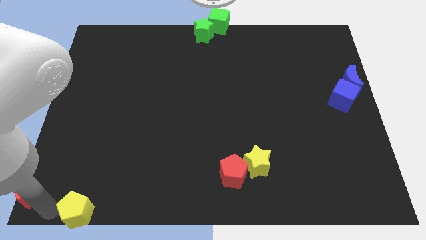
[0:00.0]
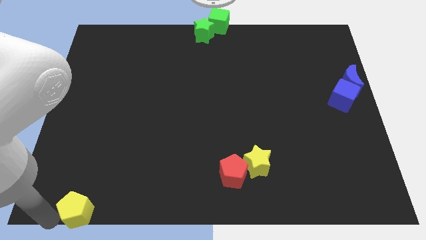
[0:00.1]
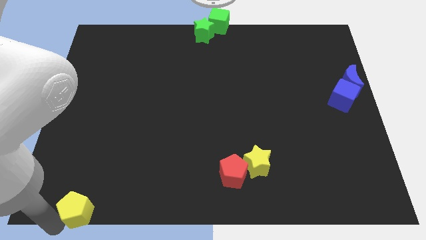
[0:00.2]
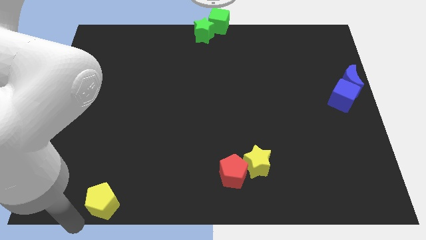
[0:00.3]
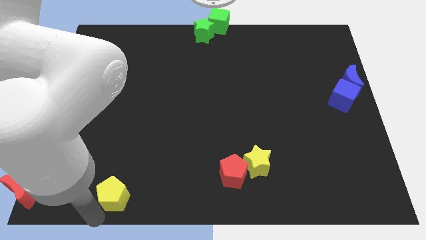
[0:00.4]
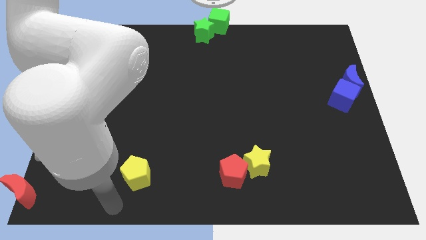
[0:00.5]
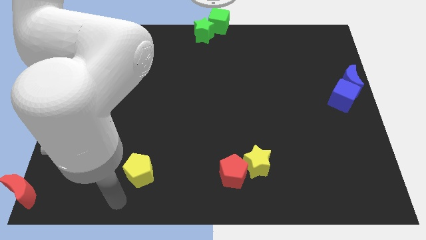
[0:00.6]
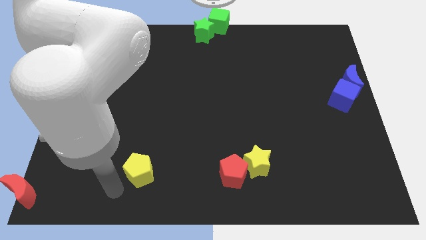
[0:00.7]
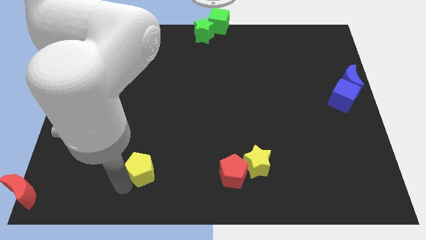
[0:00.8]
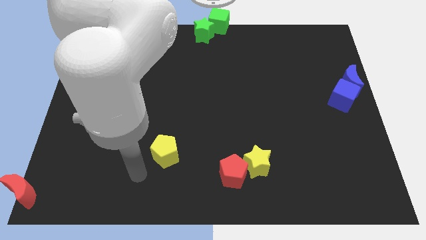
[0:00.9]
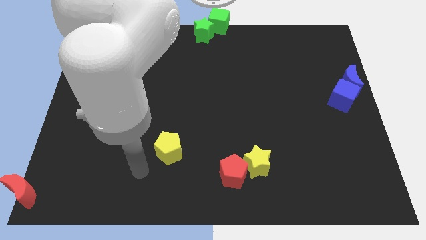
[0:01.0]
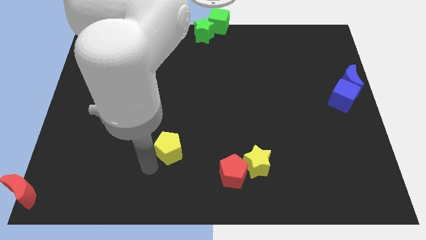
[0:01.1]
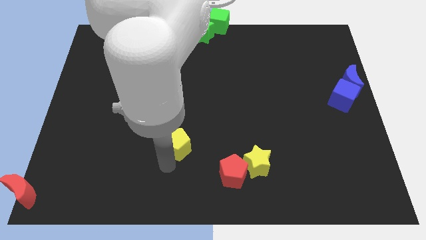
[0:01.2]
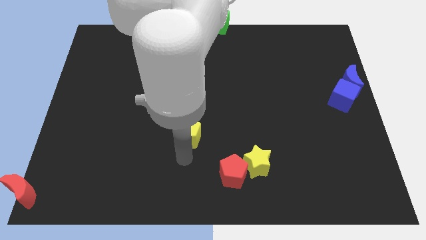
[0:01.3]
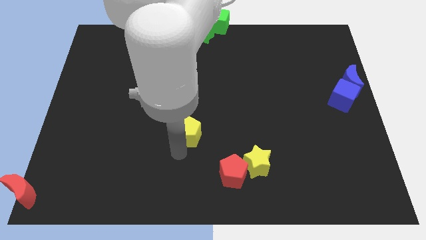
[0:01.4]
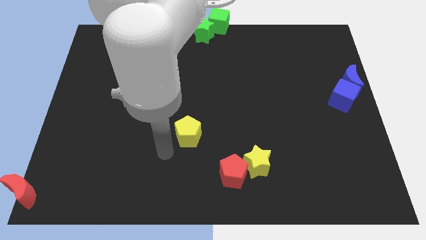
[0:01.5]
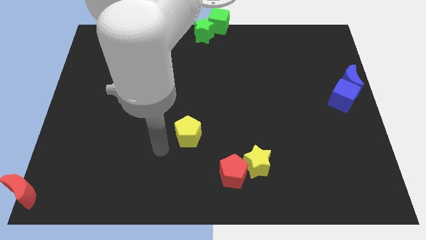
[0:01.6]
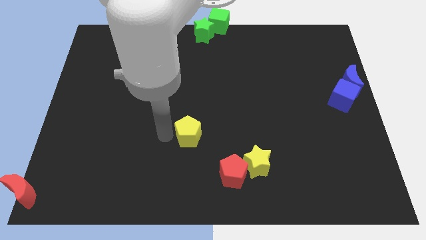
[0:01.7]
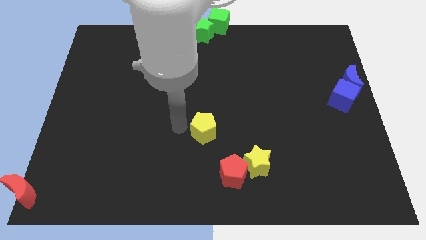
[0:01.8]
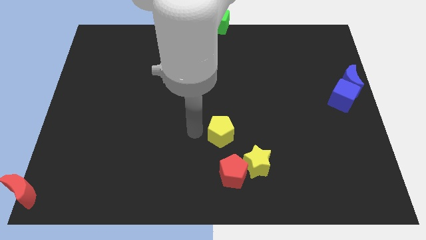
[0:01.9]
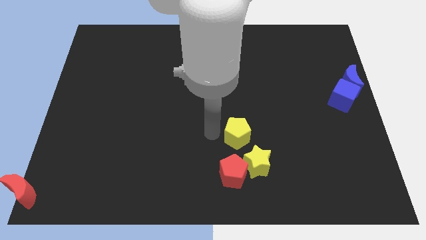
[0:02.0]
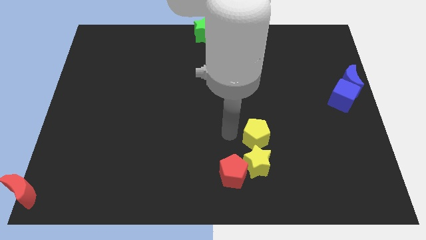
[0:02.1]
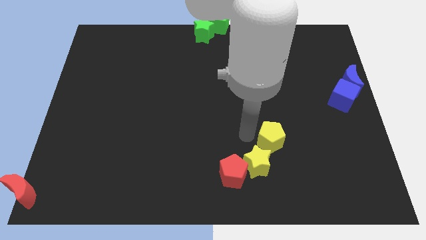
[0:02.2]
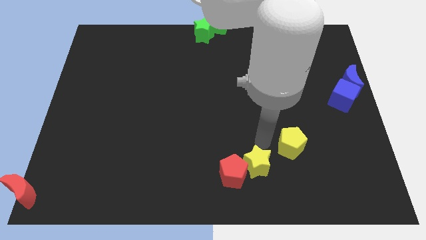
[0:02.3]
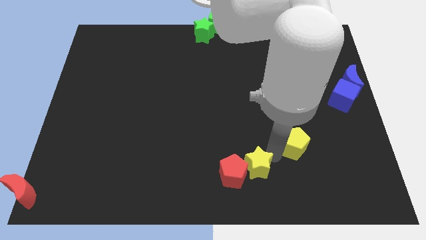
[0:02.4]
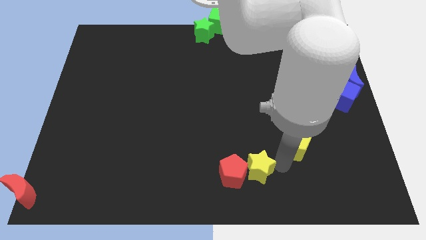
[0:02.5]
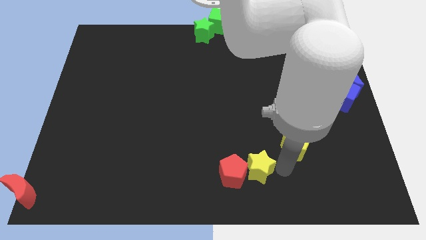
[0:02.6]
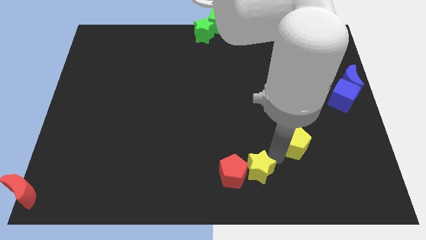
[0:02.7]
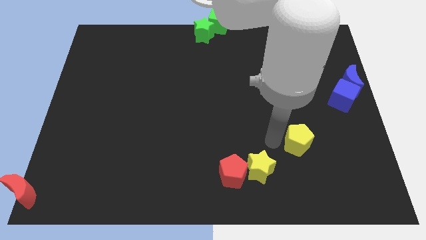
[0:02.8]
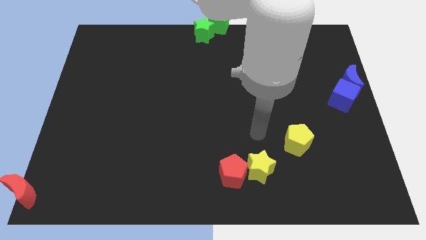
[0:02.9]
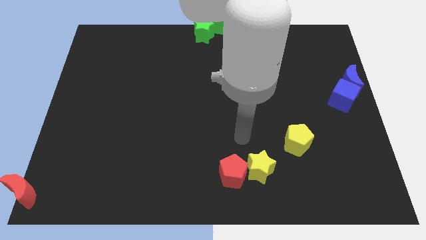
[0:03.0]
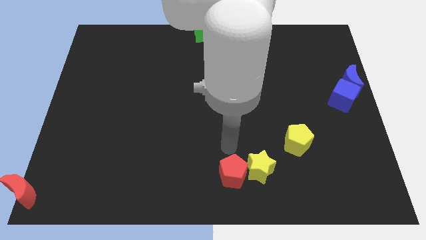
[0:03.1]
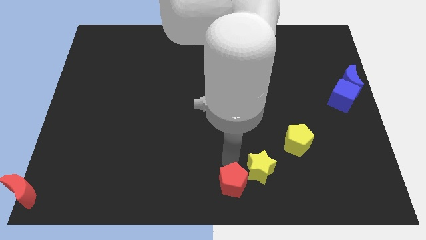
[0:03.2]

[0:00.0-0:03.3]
move the yellow pentagon to the top right of the yellow star

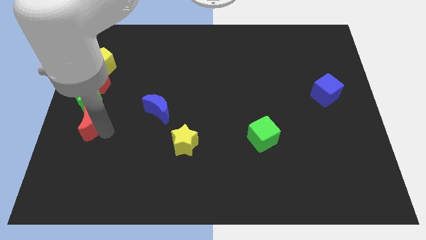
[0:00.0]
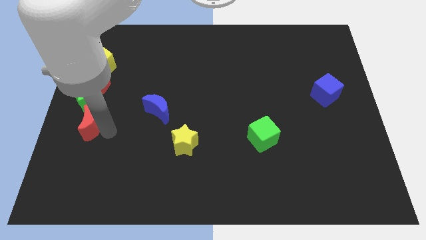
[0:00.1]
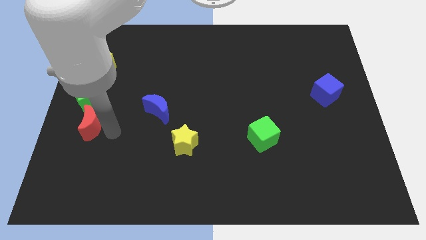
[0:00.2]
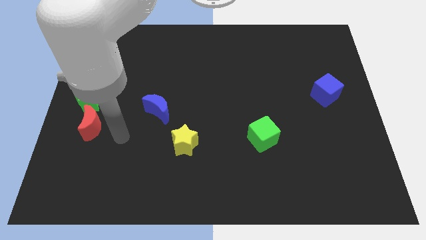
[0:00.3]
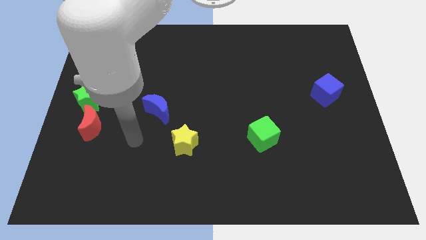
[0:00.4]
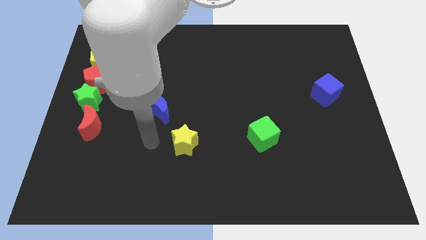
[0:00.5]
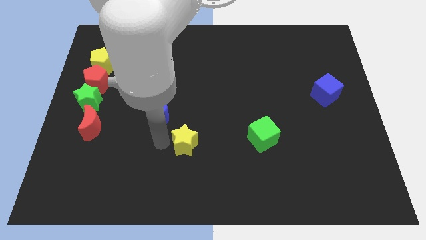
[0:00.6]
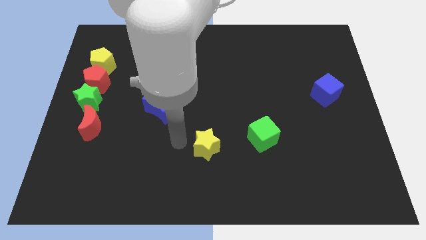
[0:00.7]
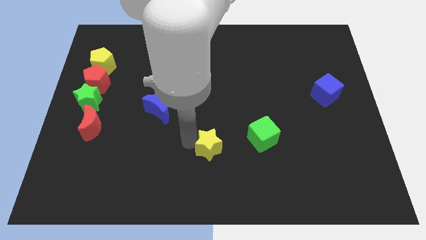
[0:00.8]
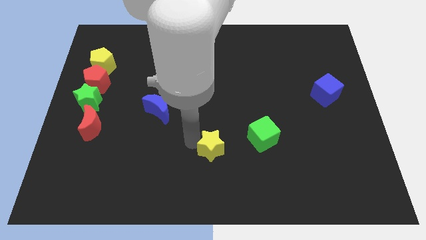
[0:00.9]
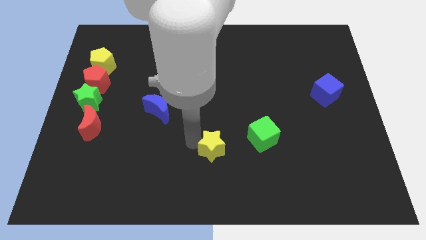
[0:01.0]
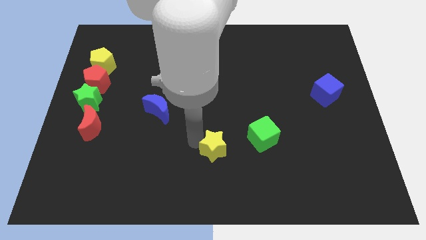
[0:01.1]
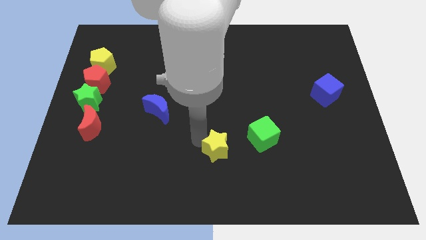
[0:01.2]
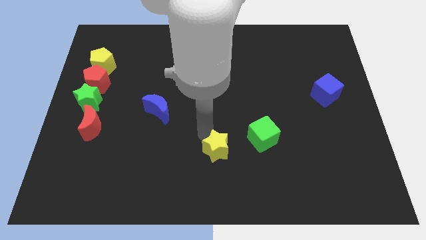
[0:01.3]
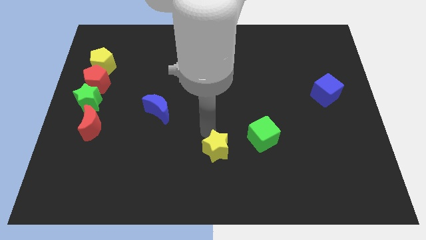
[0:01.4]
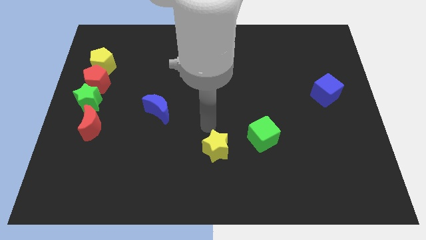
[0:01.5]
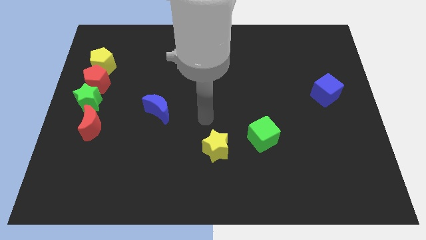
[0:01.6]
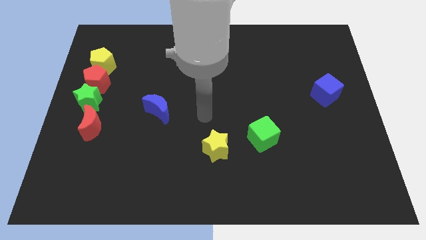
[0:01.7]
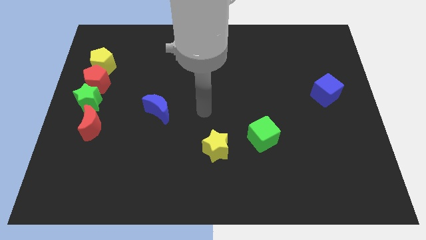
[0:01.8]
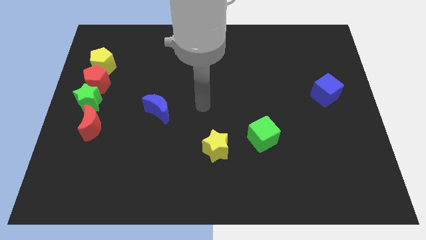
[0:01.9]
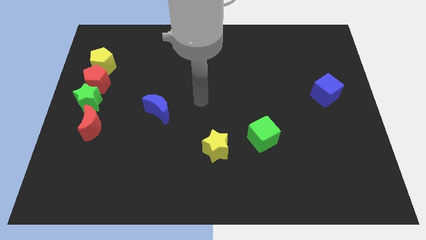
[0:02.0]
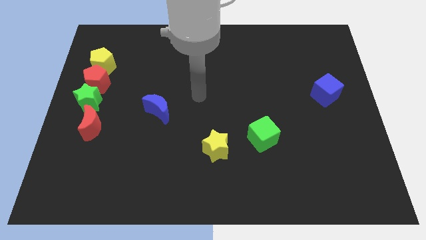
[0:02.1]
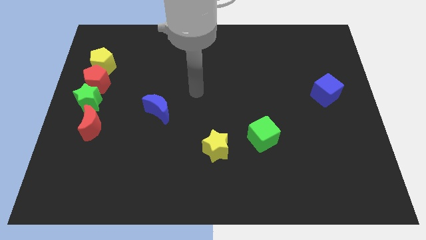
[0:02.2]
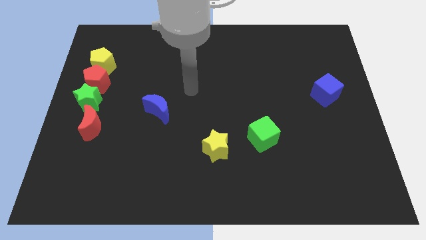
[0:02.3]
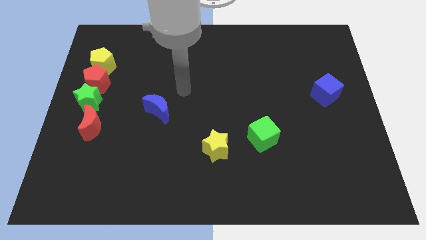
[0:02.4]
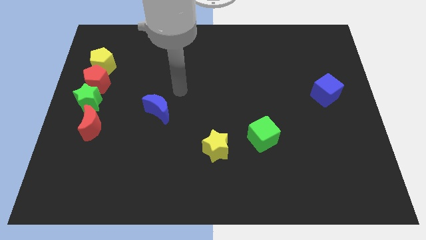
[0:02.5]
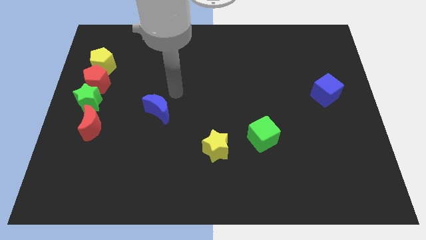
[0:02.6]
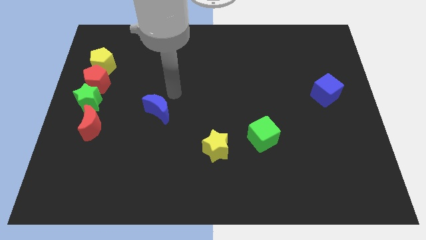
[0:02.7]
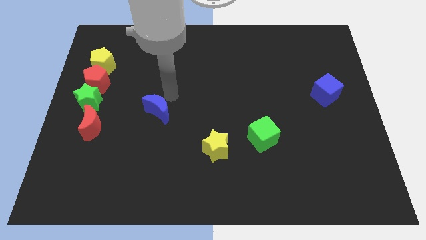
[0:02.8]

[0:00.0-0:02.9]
push yellow star towards the green cube

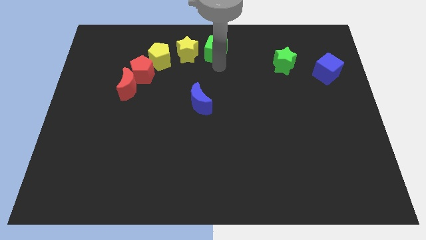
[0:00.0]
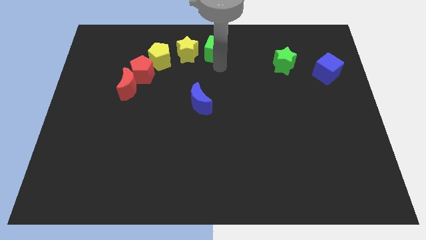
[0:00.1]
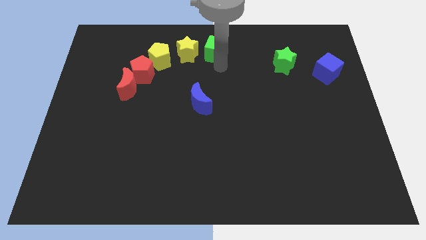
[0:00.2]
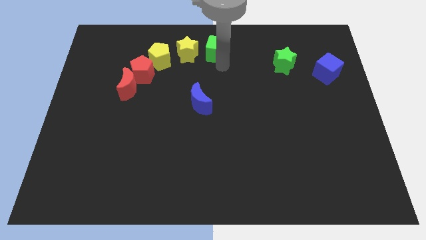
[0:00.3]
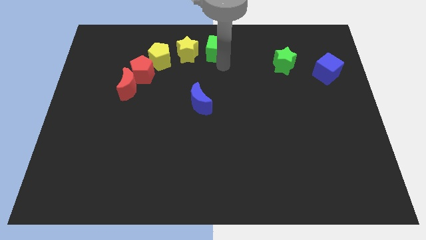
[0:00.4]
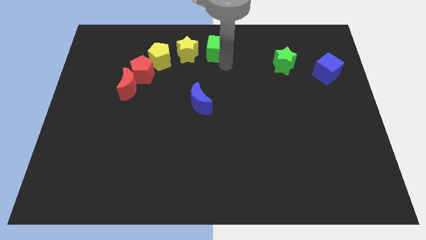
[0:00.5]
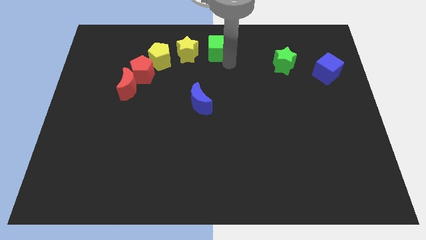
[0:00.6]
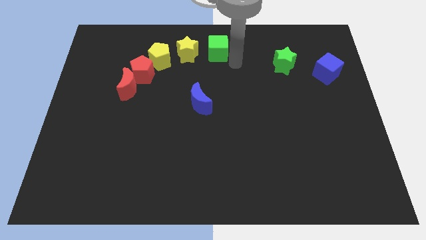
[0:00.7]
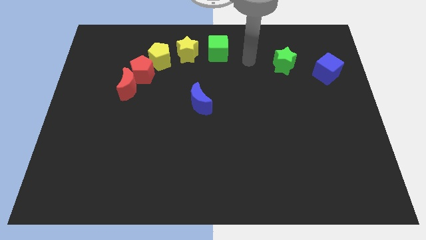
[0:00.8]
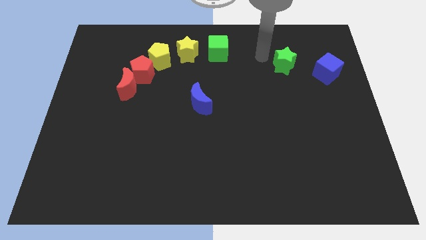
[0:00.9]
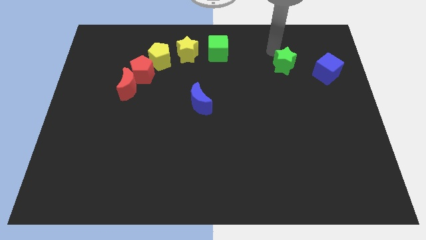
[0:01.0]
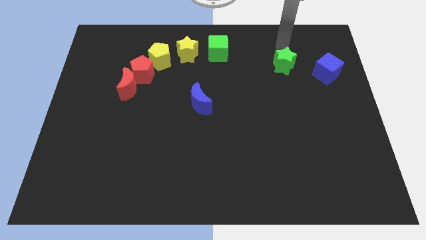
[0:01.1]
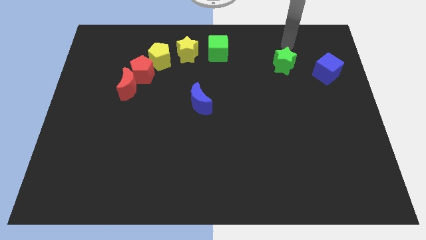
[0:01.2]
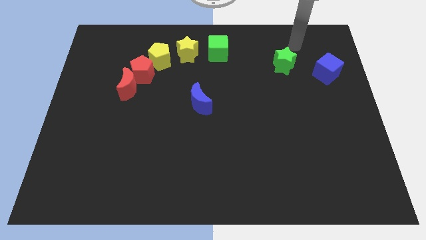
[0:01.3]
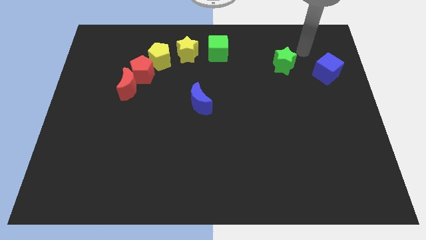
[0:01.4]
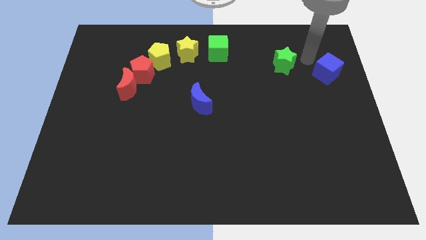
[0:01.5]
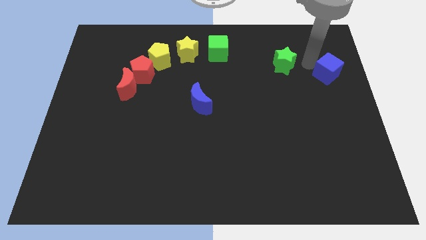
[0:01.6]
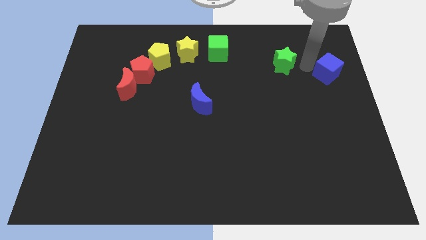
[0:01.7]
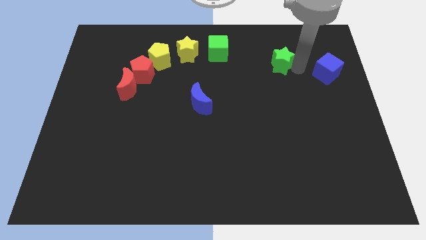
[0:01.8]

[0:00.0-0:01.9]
point your arm to the right of the green star

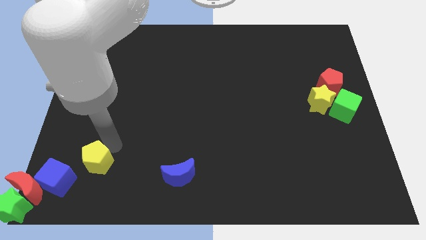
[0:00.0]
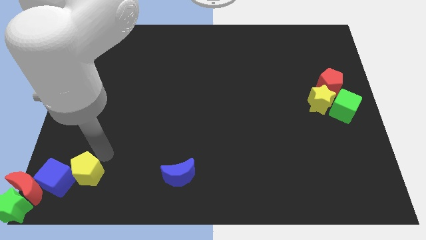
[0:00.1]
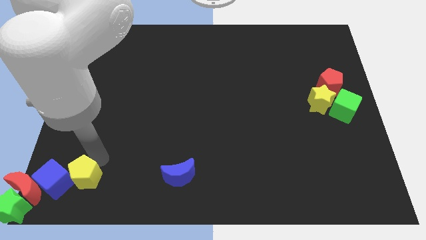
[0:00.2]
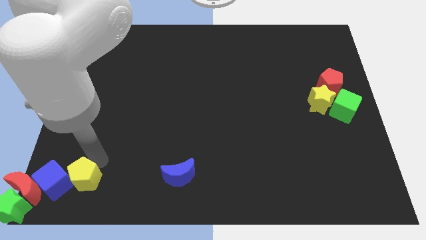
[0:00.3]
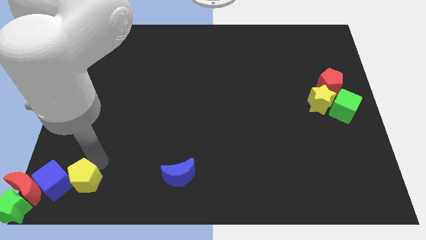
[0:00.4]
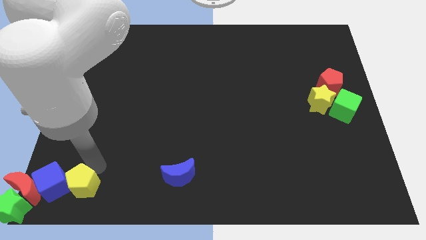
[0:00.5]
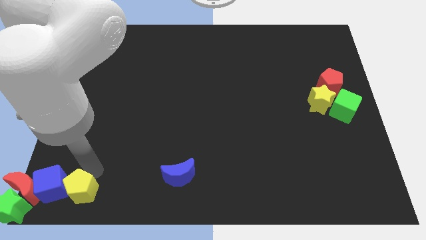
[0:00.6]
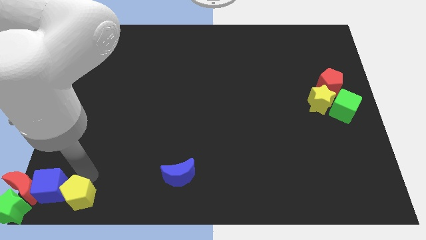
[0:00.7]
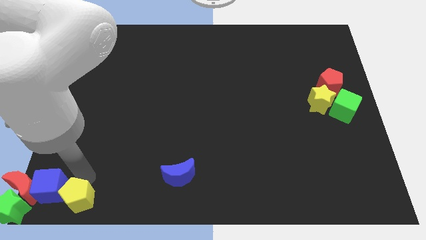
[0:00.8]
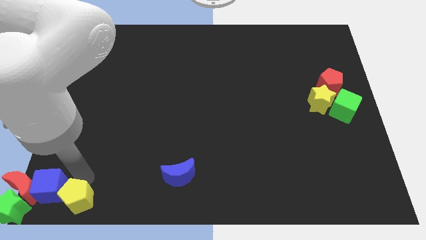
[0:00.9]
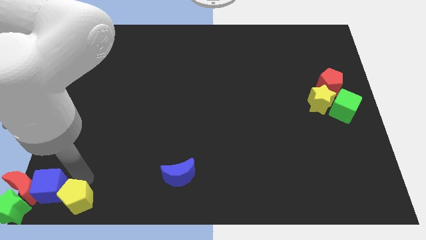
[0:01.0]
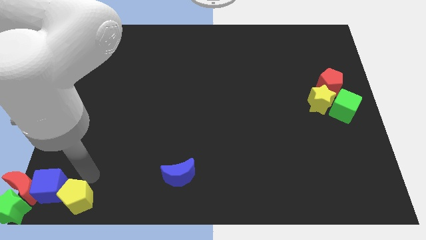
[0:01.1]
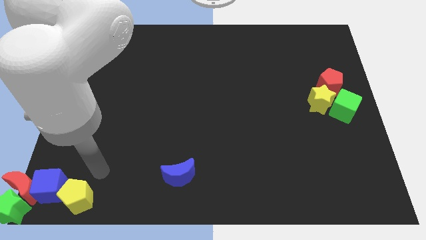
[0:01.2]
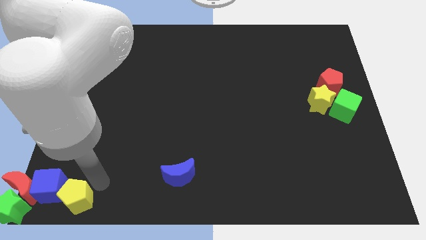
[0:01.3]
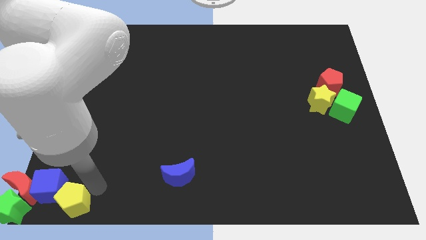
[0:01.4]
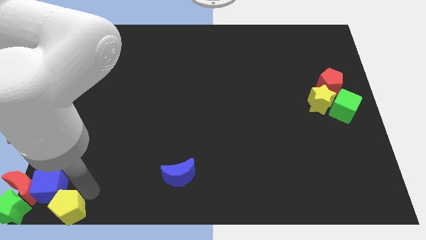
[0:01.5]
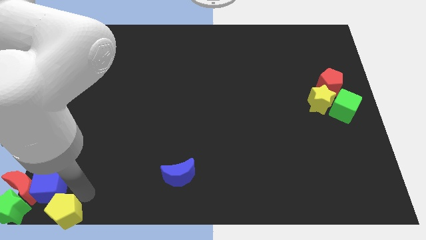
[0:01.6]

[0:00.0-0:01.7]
place yellow pentagon towards bottom near blue cube
